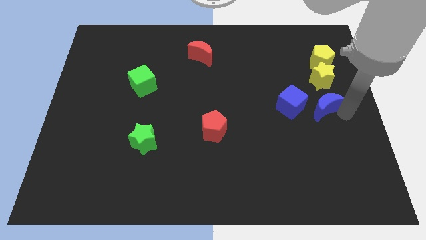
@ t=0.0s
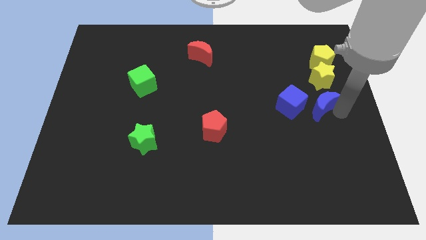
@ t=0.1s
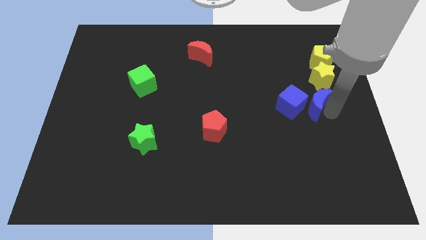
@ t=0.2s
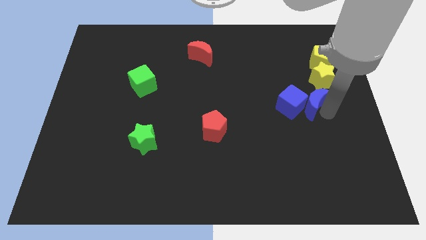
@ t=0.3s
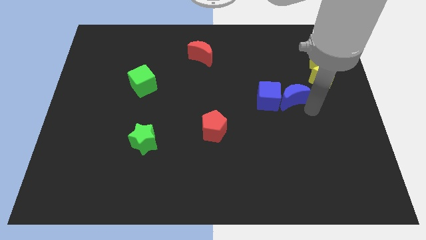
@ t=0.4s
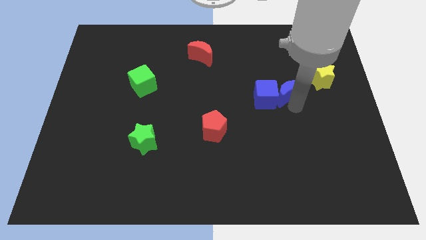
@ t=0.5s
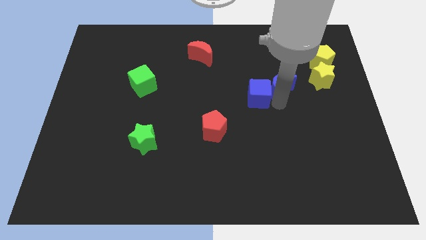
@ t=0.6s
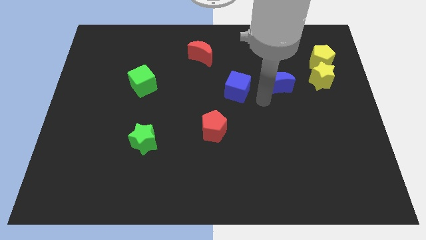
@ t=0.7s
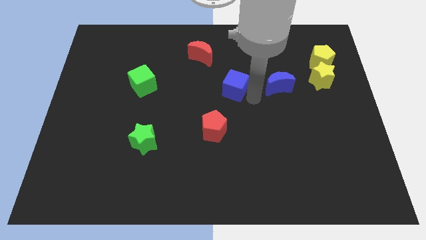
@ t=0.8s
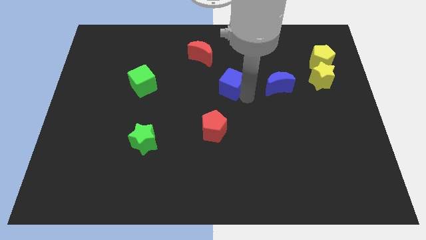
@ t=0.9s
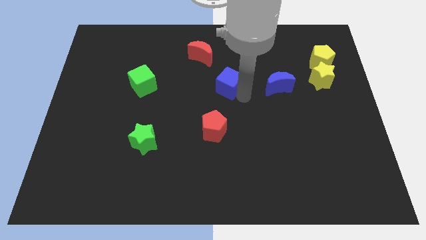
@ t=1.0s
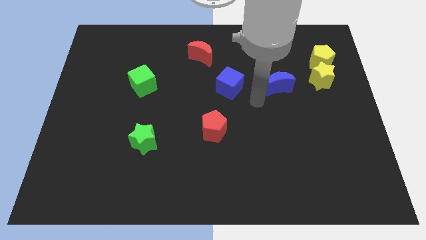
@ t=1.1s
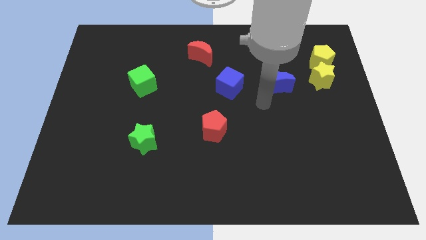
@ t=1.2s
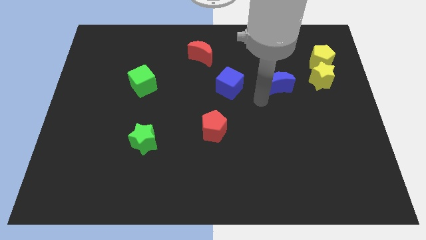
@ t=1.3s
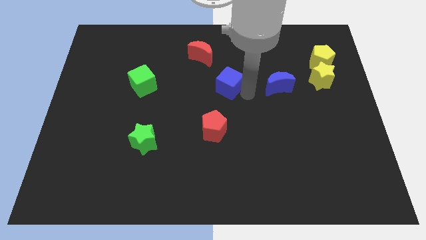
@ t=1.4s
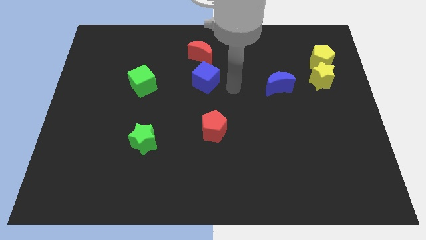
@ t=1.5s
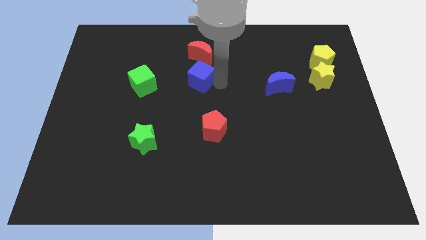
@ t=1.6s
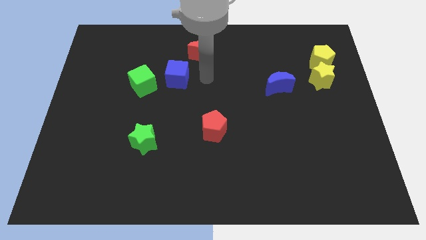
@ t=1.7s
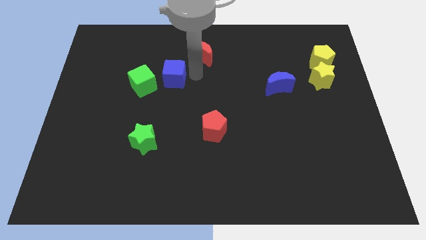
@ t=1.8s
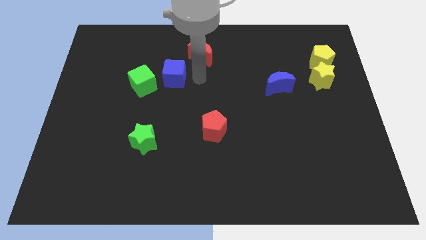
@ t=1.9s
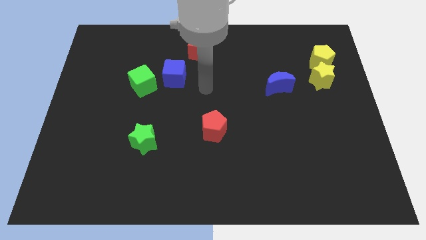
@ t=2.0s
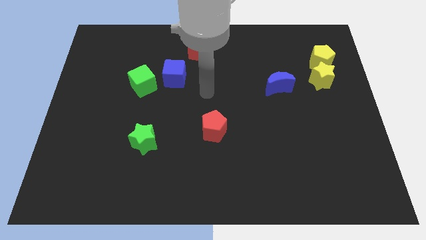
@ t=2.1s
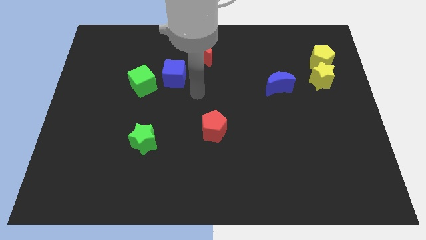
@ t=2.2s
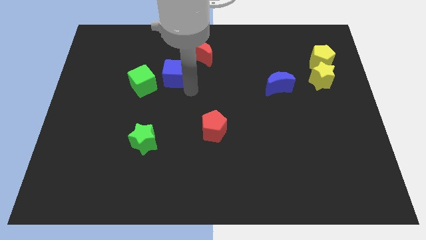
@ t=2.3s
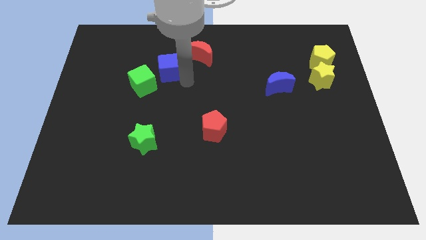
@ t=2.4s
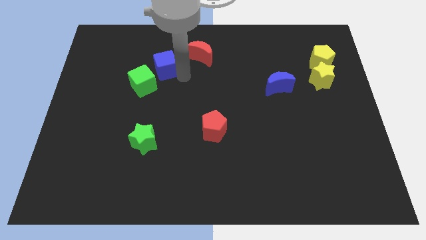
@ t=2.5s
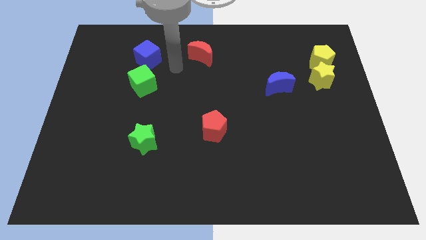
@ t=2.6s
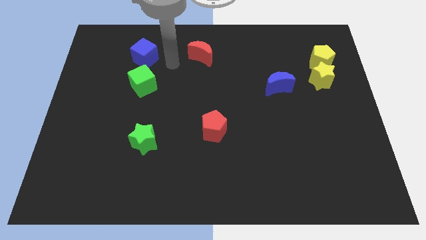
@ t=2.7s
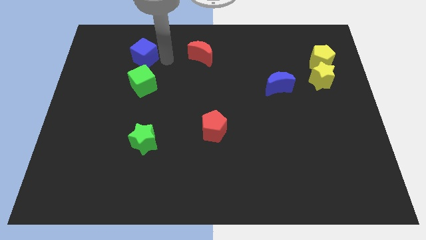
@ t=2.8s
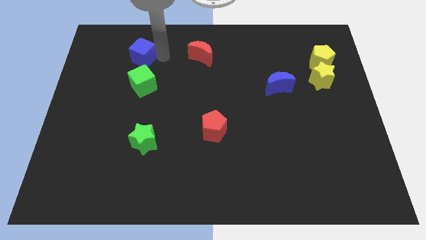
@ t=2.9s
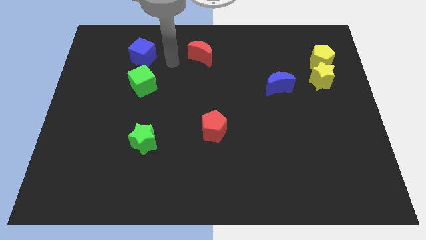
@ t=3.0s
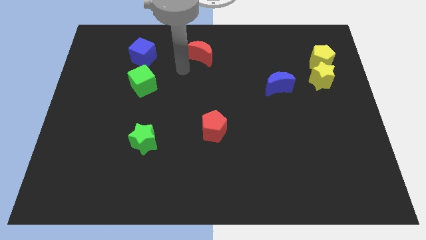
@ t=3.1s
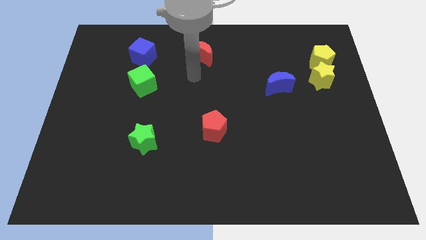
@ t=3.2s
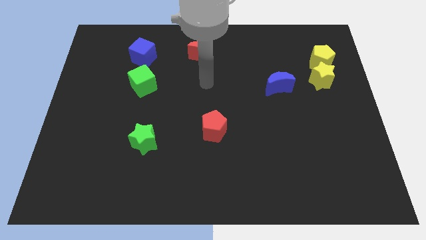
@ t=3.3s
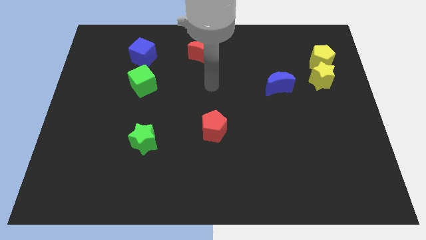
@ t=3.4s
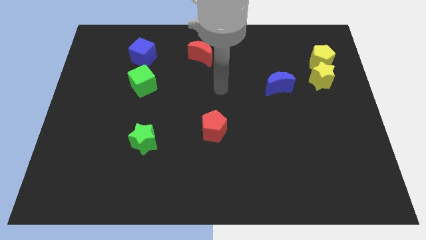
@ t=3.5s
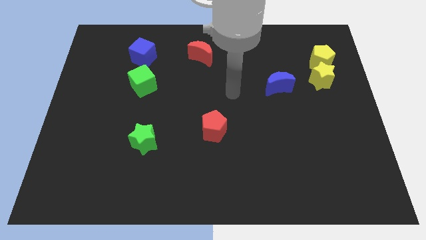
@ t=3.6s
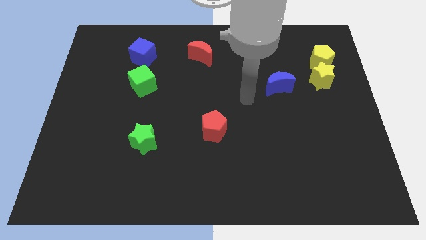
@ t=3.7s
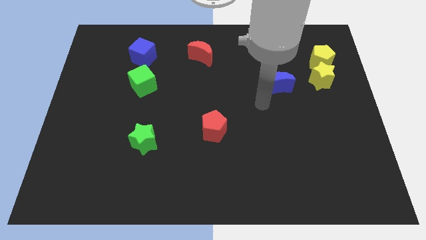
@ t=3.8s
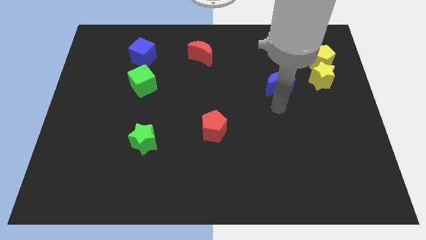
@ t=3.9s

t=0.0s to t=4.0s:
move the blue cube away from blue crescent

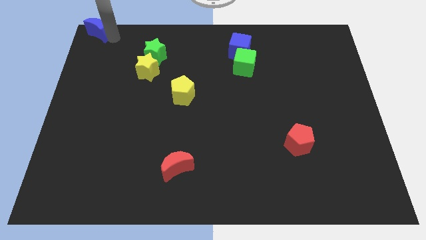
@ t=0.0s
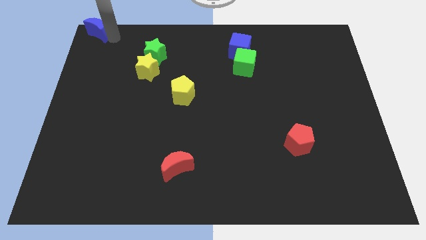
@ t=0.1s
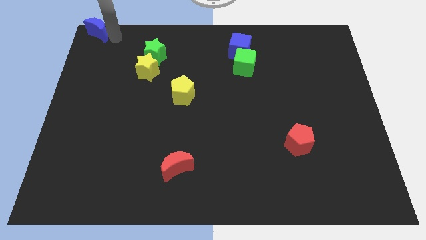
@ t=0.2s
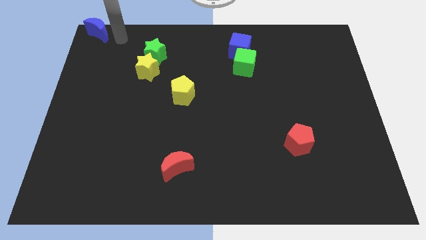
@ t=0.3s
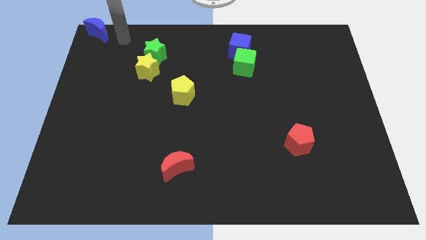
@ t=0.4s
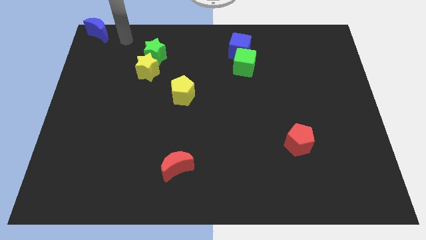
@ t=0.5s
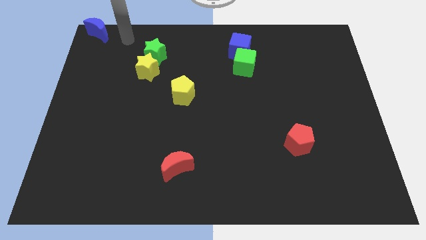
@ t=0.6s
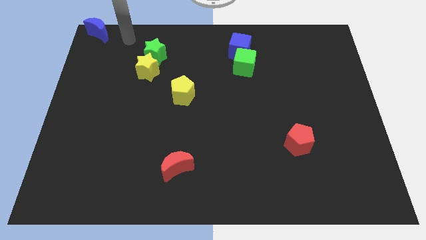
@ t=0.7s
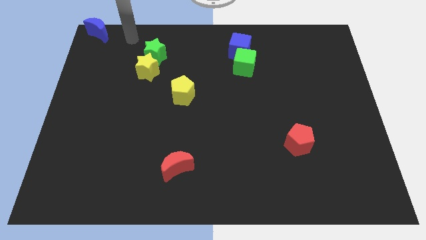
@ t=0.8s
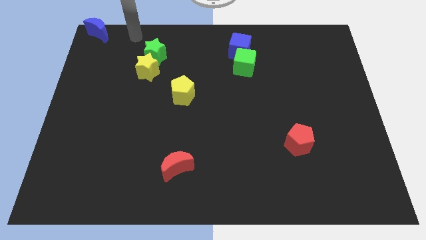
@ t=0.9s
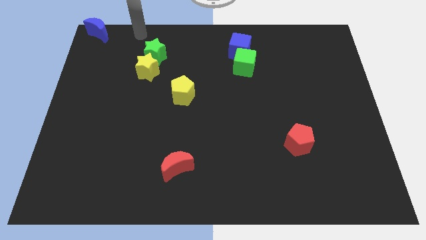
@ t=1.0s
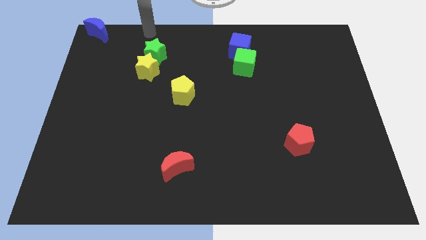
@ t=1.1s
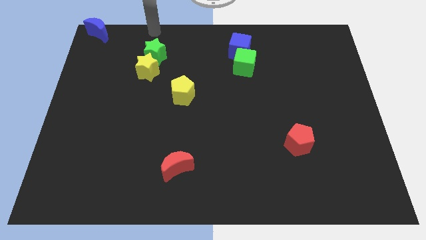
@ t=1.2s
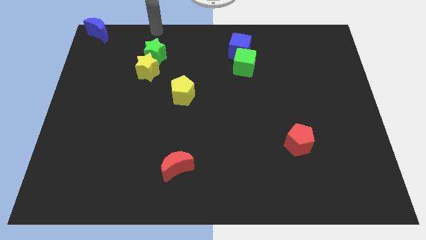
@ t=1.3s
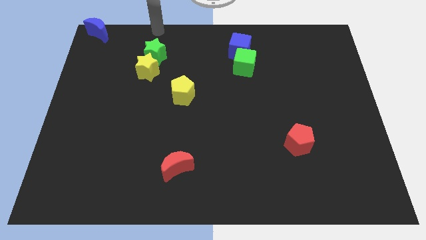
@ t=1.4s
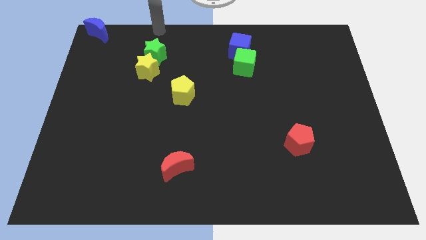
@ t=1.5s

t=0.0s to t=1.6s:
move the arm away from the blue moon

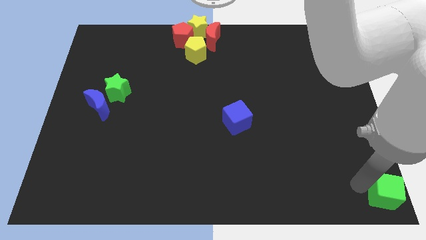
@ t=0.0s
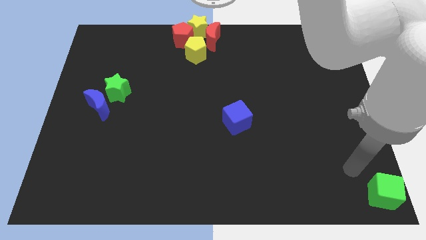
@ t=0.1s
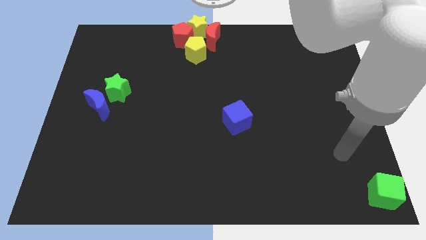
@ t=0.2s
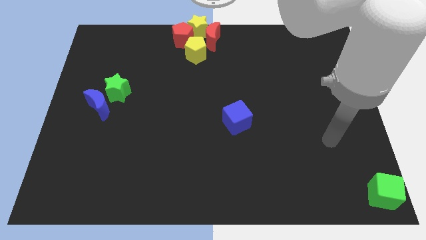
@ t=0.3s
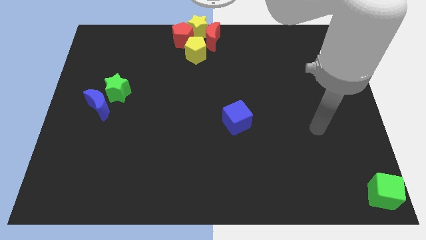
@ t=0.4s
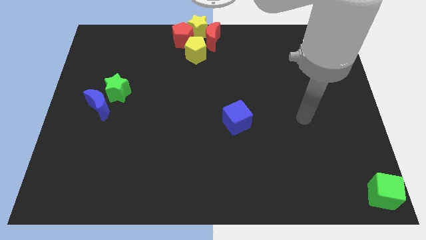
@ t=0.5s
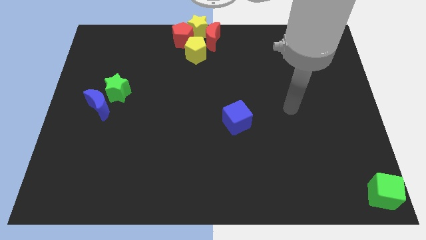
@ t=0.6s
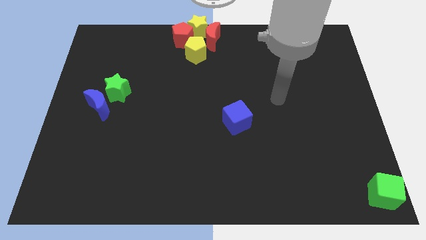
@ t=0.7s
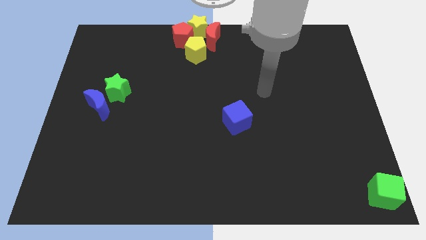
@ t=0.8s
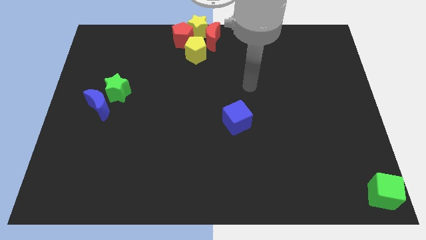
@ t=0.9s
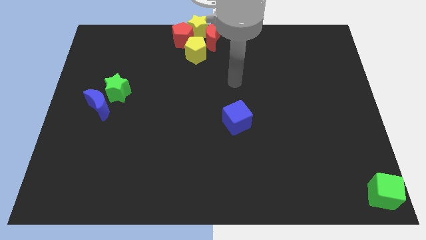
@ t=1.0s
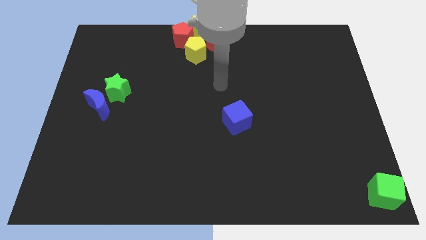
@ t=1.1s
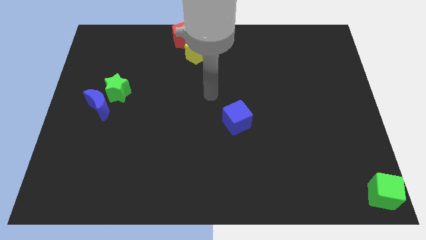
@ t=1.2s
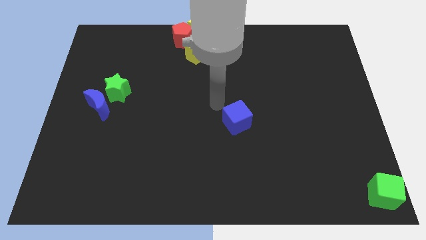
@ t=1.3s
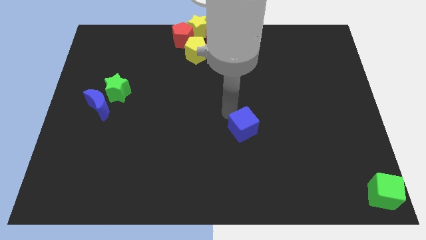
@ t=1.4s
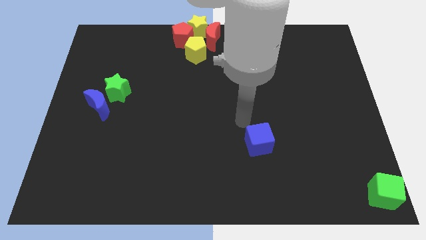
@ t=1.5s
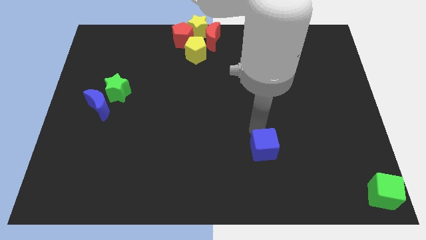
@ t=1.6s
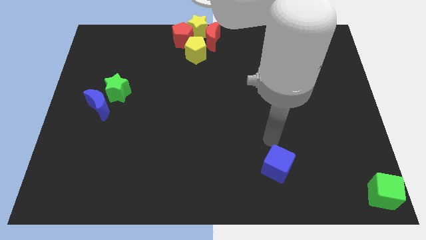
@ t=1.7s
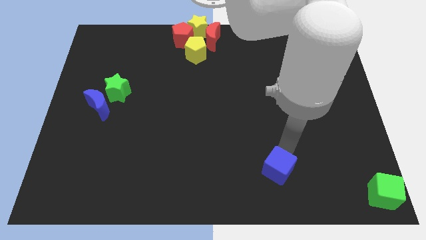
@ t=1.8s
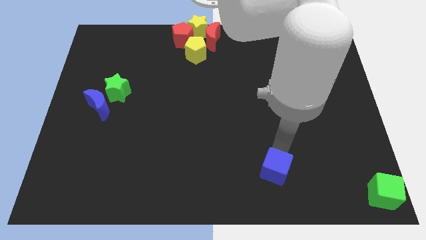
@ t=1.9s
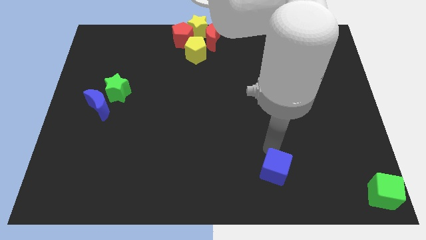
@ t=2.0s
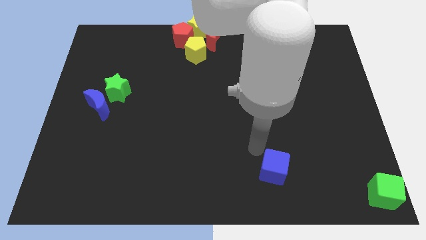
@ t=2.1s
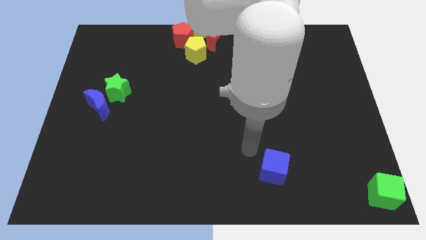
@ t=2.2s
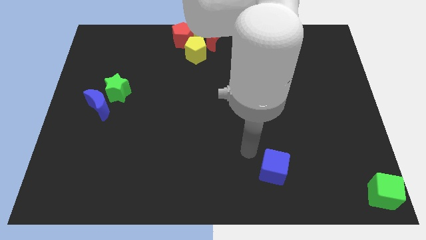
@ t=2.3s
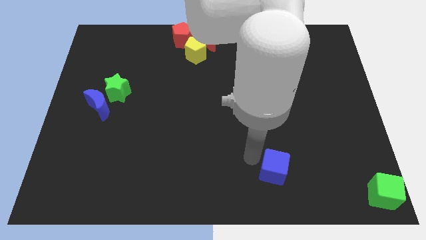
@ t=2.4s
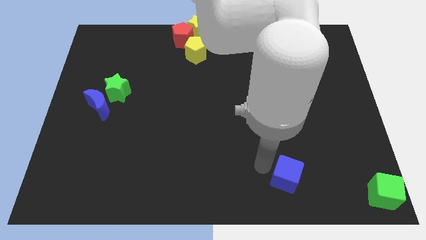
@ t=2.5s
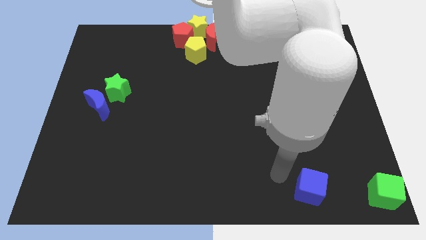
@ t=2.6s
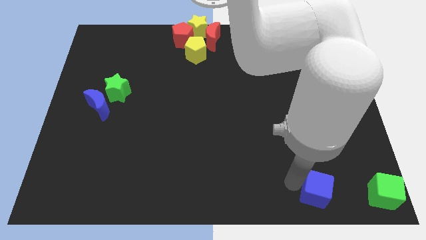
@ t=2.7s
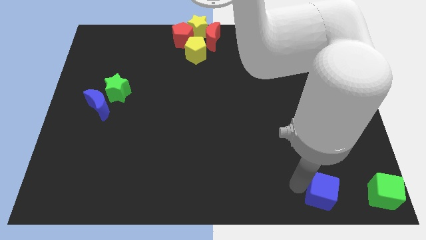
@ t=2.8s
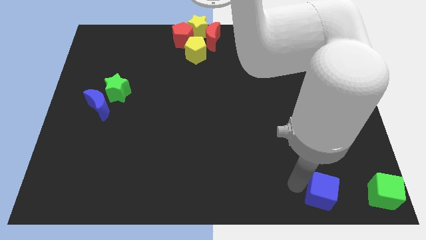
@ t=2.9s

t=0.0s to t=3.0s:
move the blue cube horizontal to the green cube

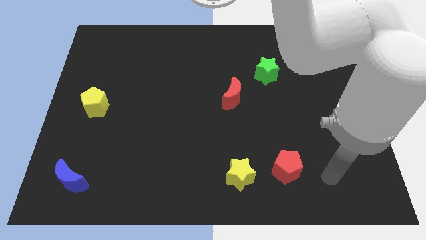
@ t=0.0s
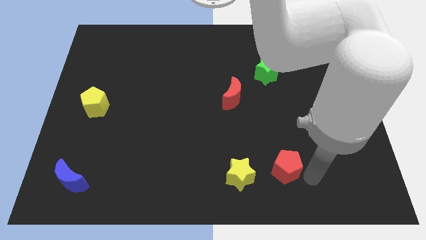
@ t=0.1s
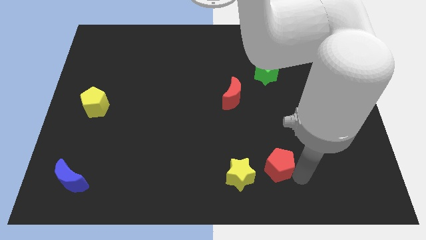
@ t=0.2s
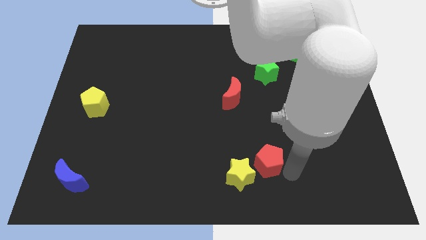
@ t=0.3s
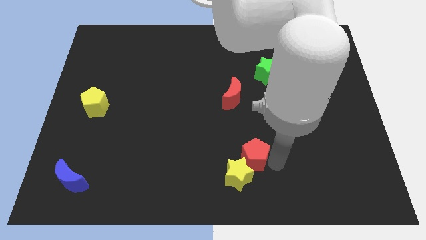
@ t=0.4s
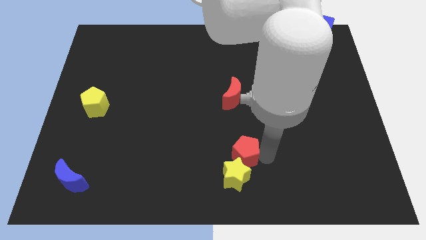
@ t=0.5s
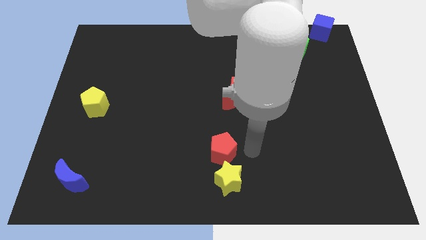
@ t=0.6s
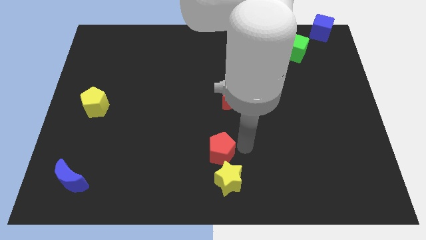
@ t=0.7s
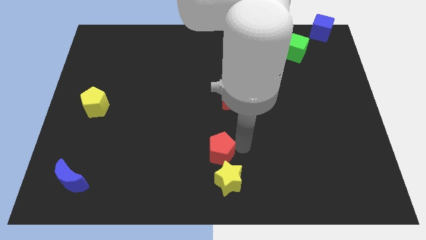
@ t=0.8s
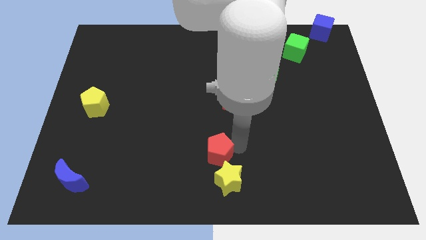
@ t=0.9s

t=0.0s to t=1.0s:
move the red pentagon above the yellow star
